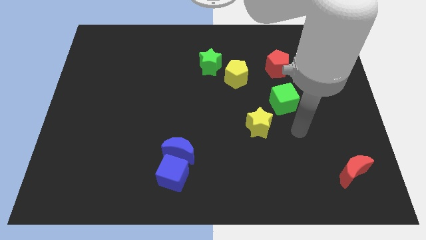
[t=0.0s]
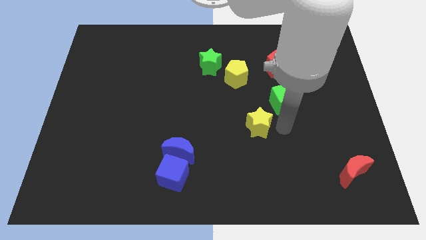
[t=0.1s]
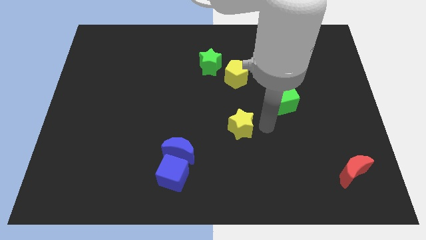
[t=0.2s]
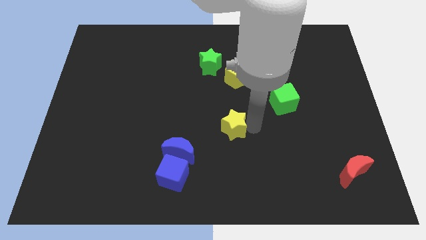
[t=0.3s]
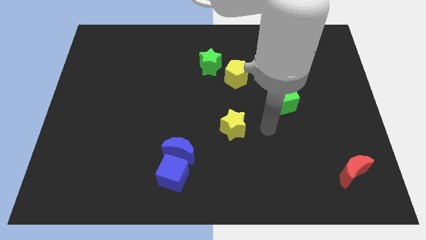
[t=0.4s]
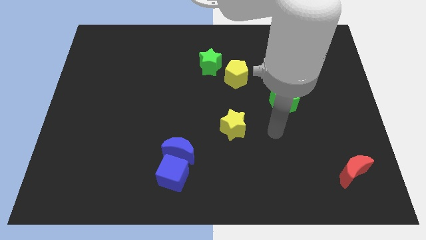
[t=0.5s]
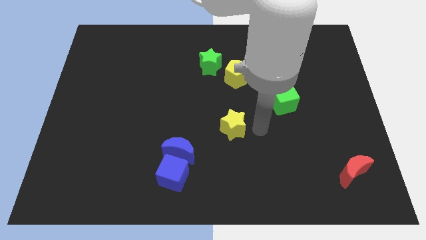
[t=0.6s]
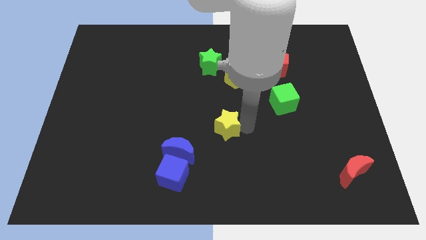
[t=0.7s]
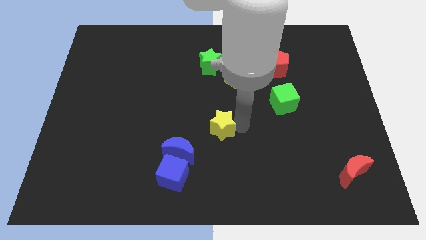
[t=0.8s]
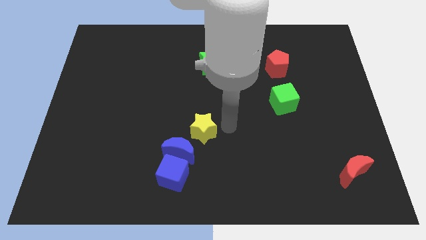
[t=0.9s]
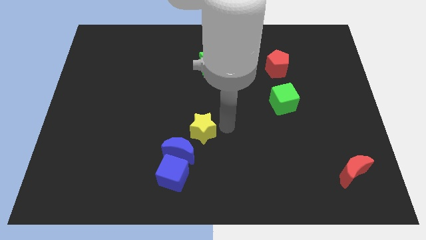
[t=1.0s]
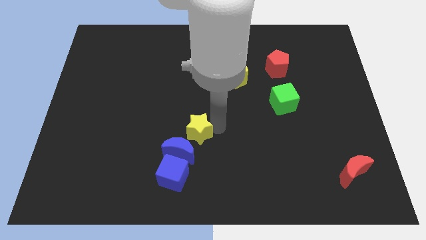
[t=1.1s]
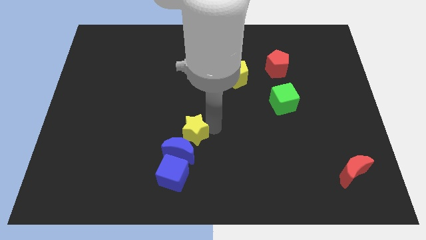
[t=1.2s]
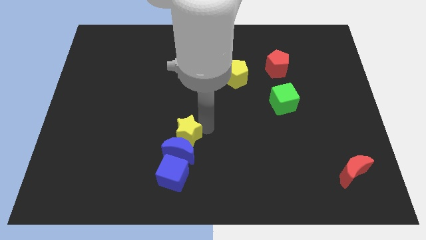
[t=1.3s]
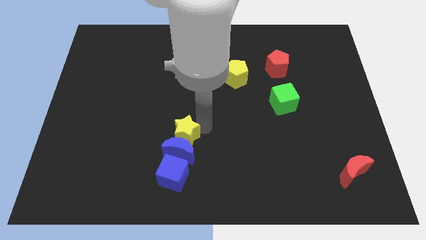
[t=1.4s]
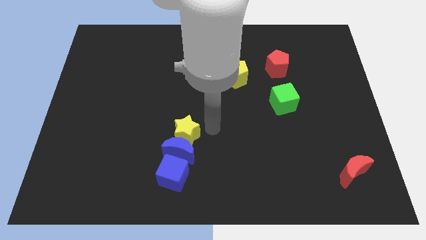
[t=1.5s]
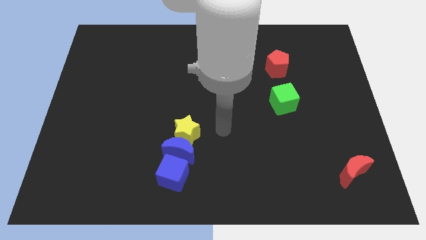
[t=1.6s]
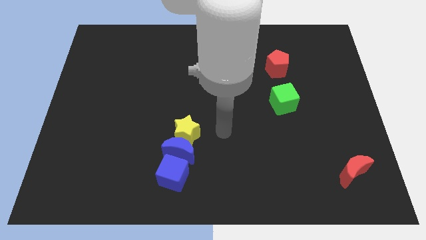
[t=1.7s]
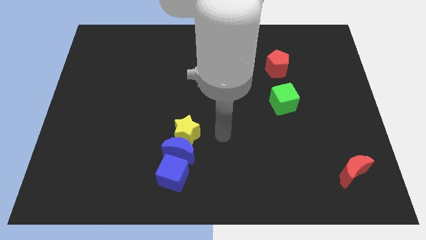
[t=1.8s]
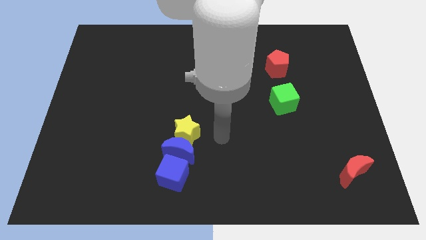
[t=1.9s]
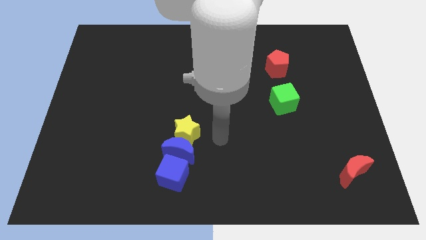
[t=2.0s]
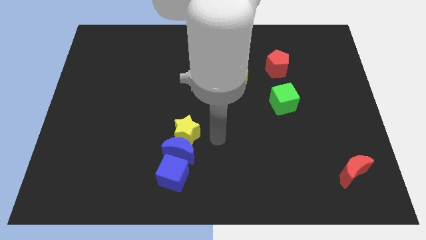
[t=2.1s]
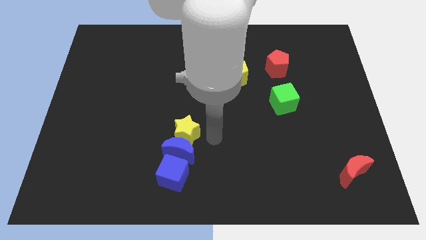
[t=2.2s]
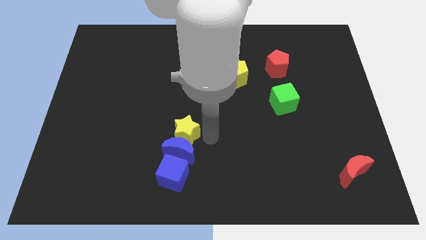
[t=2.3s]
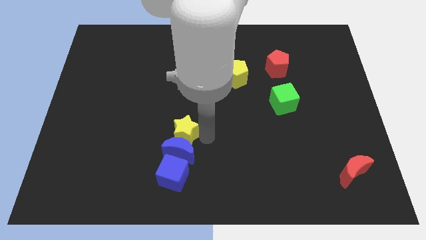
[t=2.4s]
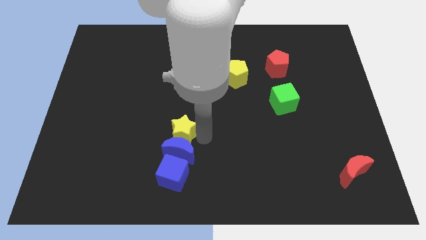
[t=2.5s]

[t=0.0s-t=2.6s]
move the yellow star to the top of the blue crescent

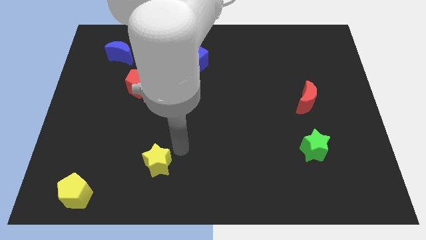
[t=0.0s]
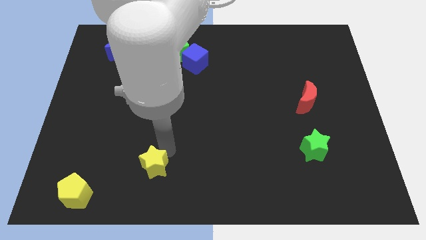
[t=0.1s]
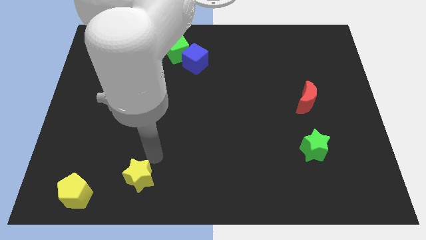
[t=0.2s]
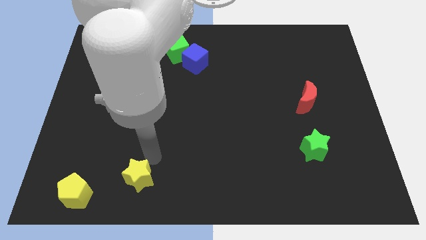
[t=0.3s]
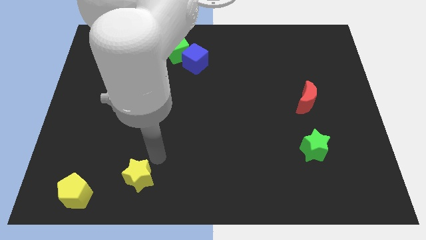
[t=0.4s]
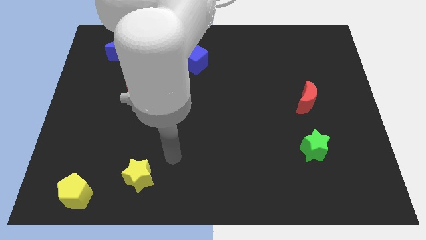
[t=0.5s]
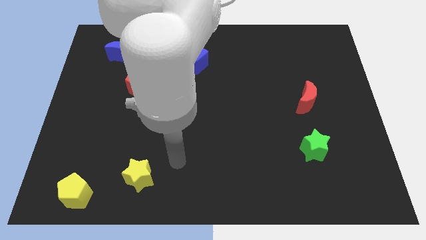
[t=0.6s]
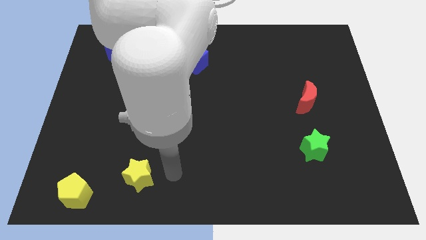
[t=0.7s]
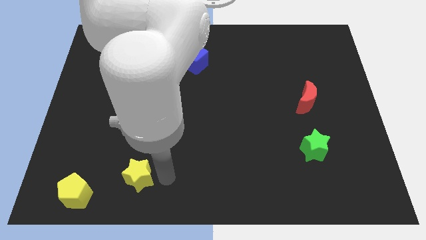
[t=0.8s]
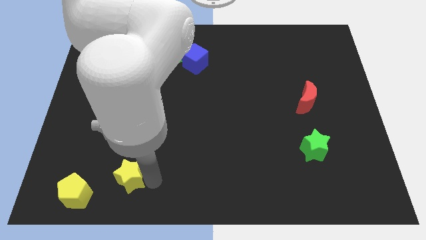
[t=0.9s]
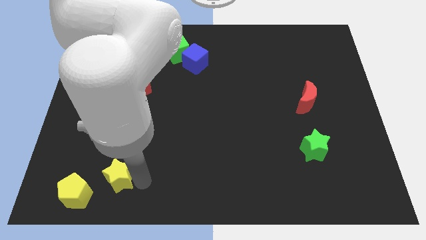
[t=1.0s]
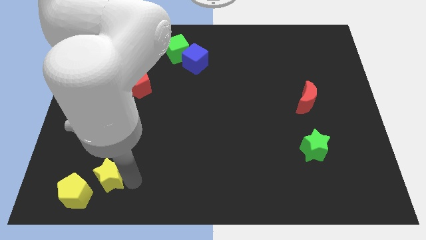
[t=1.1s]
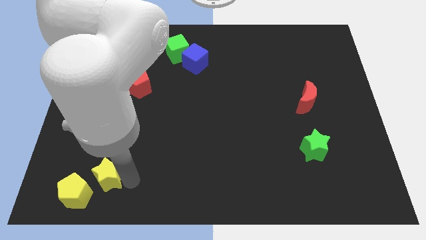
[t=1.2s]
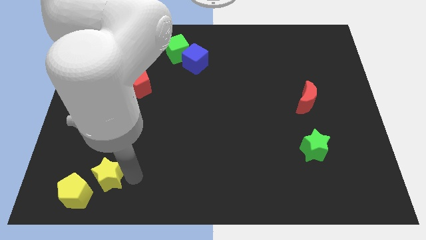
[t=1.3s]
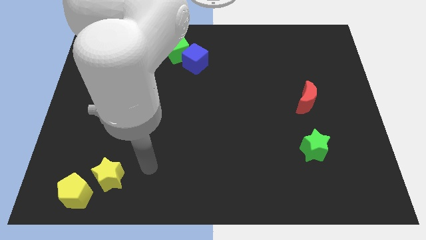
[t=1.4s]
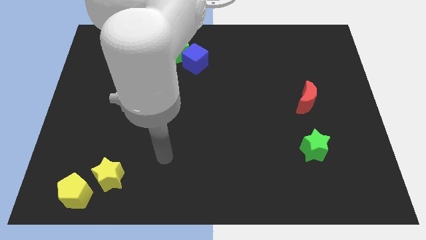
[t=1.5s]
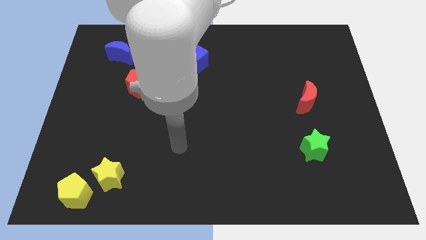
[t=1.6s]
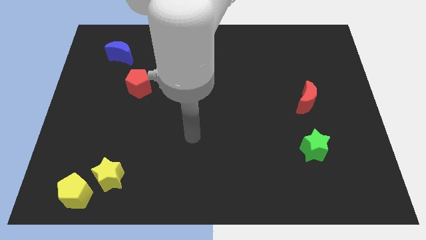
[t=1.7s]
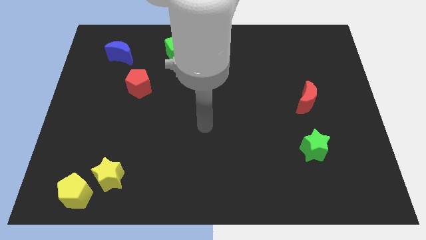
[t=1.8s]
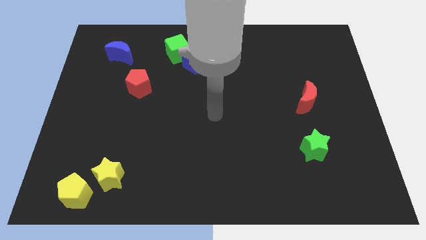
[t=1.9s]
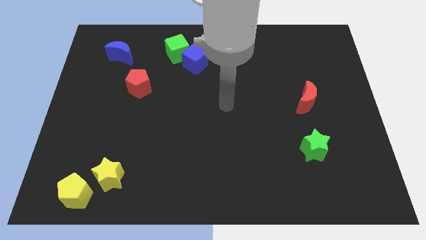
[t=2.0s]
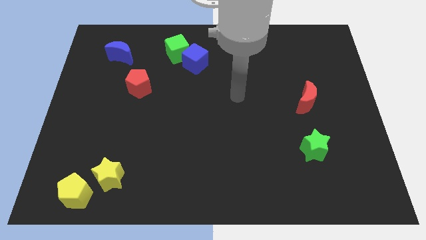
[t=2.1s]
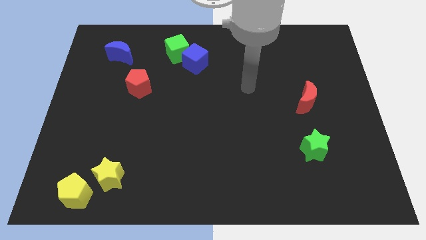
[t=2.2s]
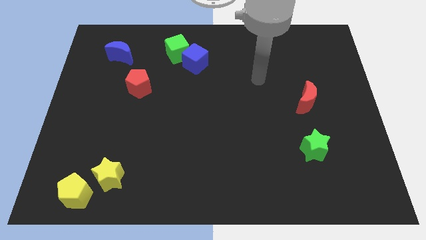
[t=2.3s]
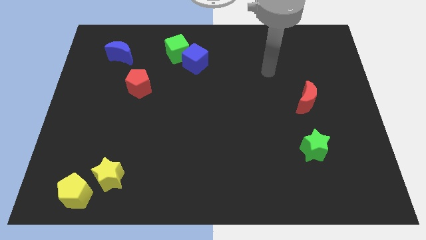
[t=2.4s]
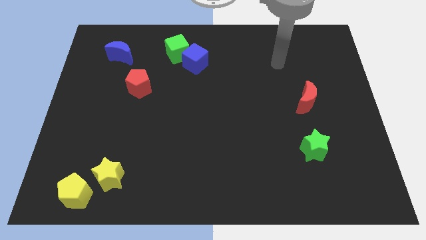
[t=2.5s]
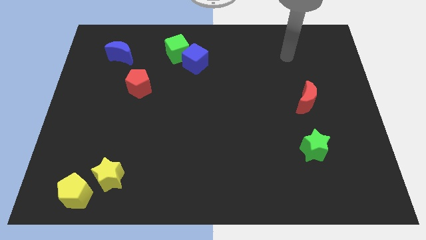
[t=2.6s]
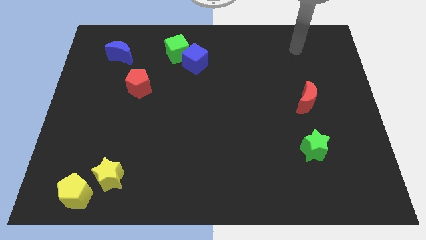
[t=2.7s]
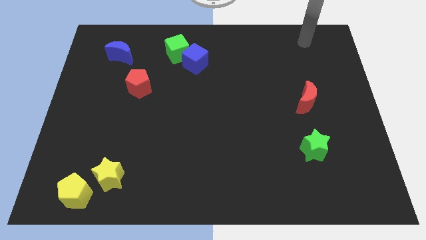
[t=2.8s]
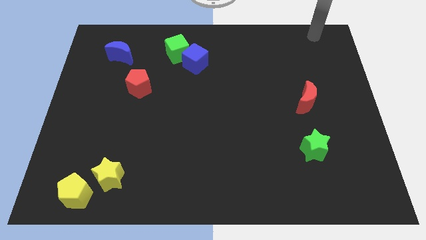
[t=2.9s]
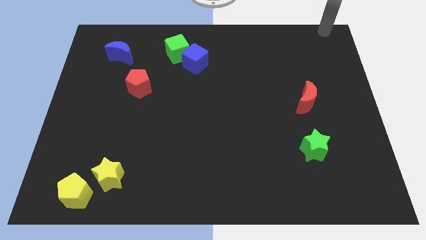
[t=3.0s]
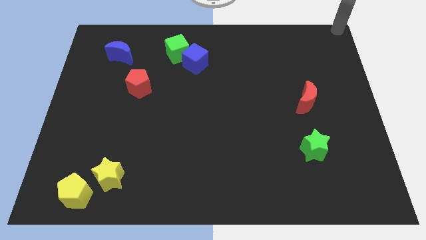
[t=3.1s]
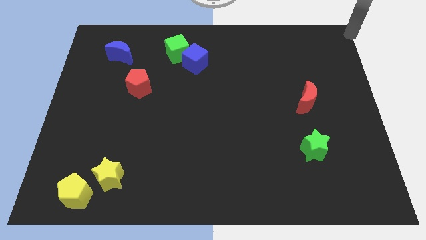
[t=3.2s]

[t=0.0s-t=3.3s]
place your arm to the top right corner of the board

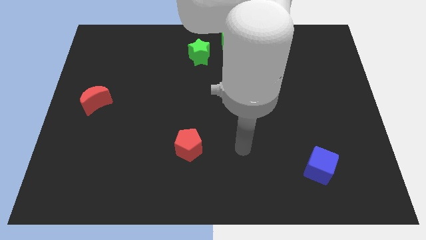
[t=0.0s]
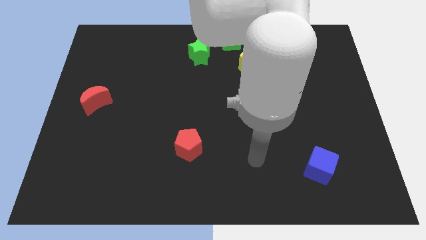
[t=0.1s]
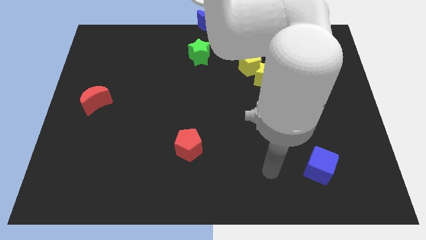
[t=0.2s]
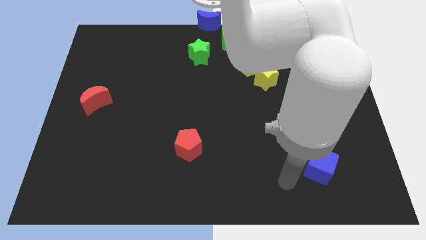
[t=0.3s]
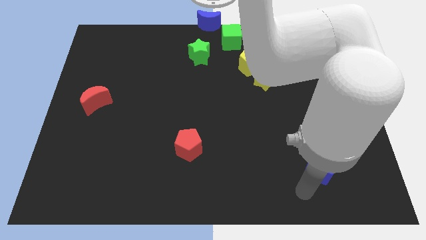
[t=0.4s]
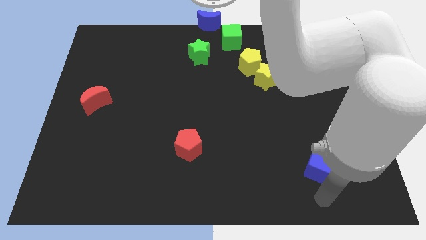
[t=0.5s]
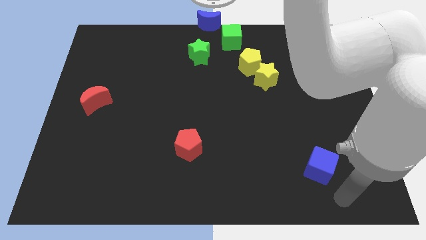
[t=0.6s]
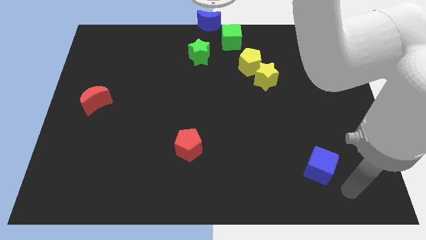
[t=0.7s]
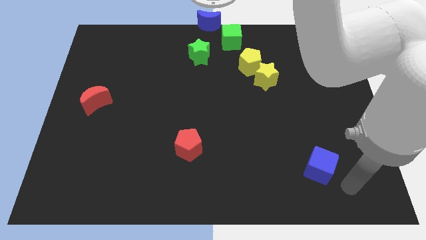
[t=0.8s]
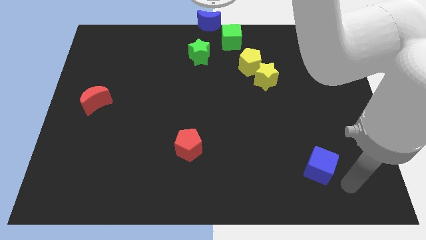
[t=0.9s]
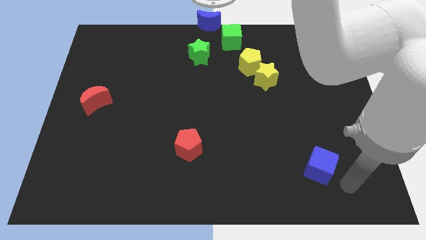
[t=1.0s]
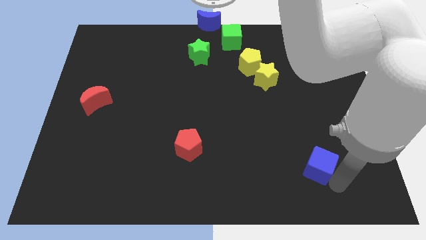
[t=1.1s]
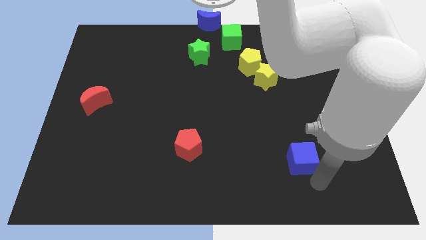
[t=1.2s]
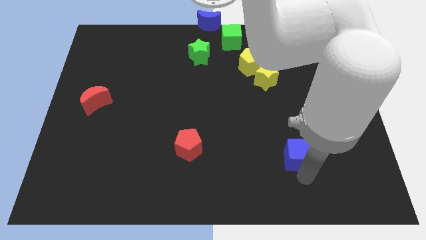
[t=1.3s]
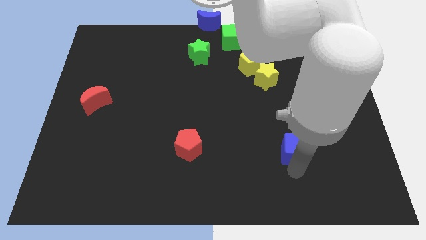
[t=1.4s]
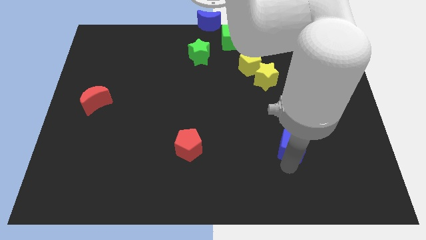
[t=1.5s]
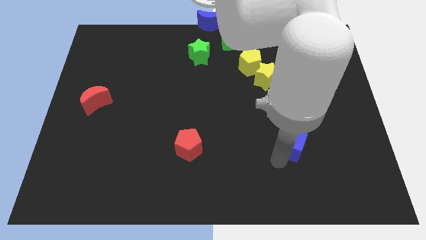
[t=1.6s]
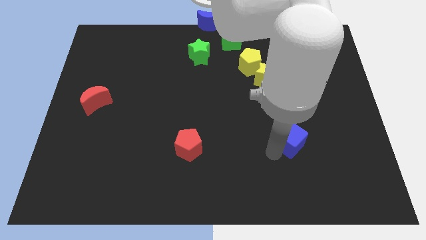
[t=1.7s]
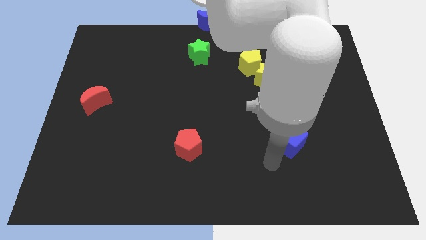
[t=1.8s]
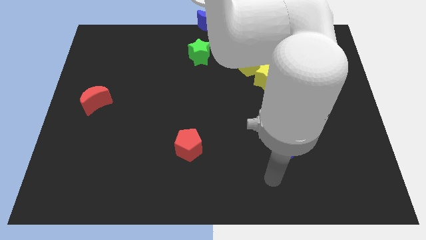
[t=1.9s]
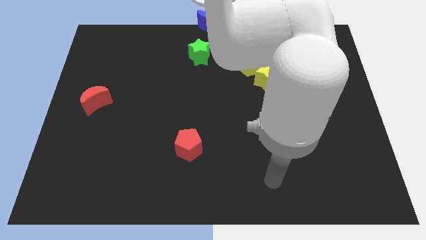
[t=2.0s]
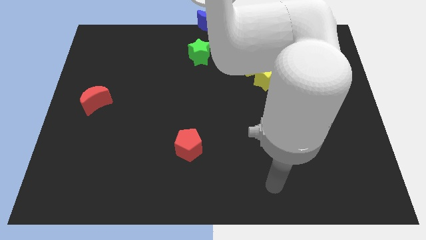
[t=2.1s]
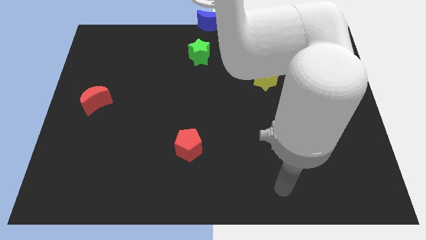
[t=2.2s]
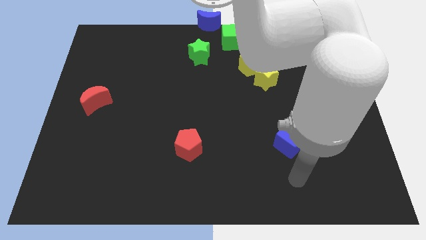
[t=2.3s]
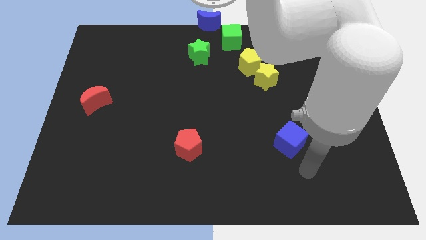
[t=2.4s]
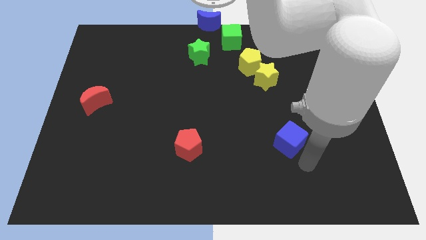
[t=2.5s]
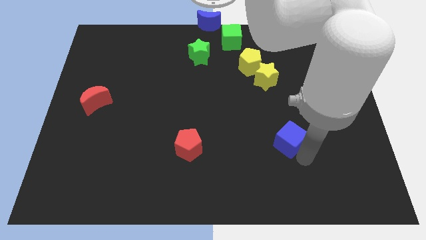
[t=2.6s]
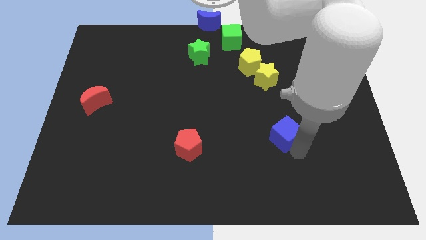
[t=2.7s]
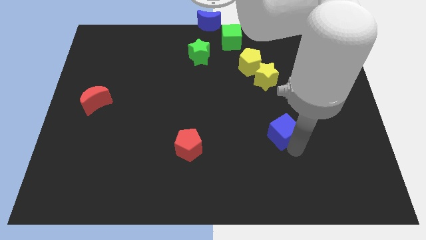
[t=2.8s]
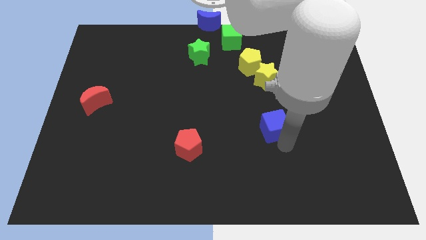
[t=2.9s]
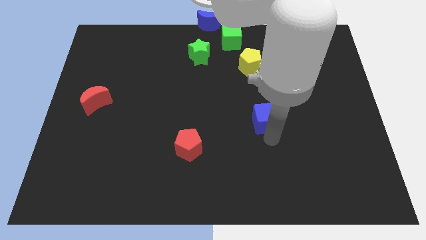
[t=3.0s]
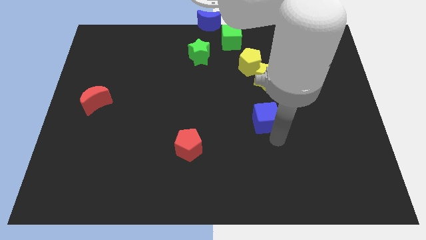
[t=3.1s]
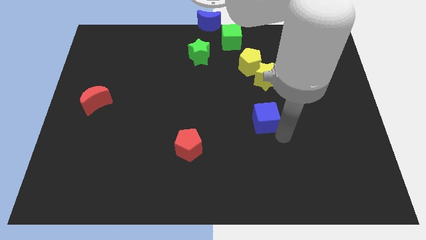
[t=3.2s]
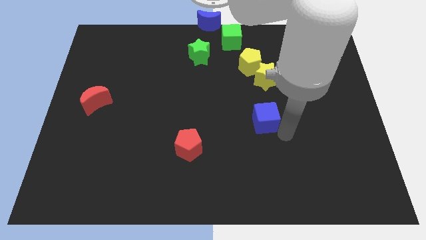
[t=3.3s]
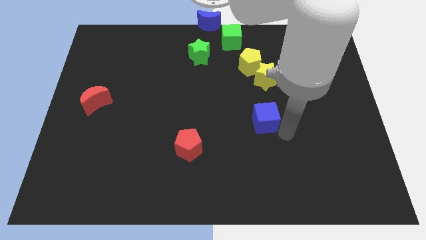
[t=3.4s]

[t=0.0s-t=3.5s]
push the blue cube below the yellow star
